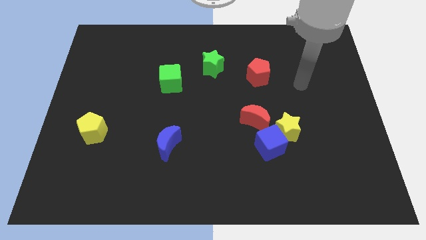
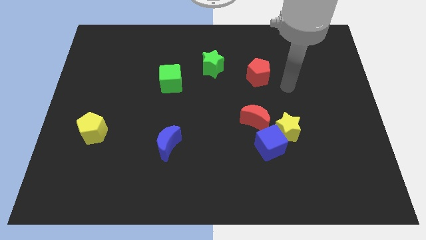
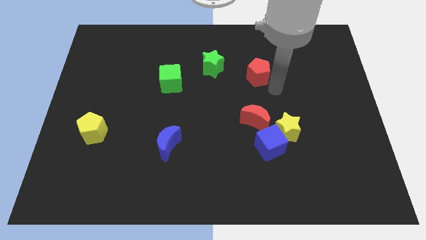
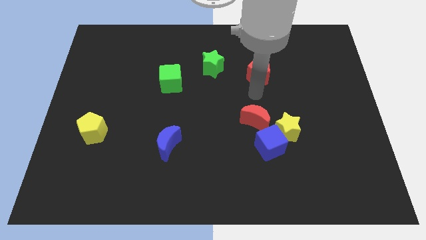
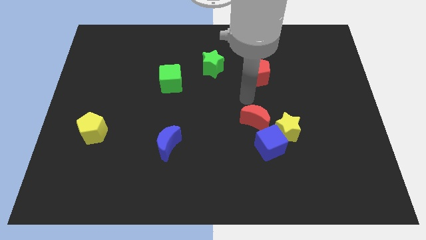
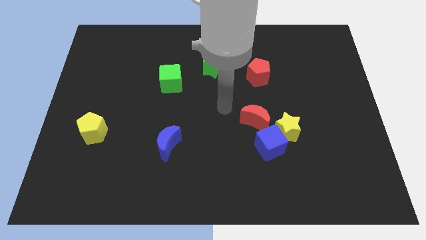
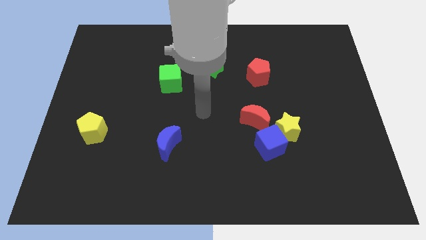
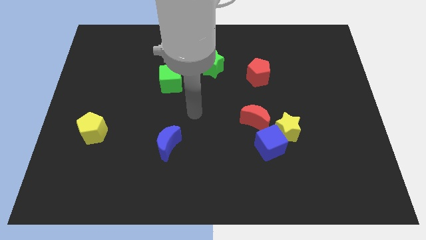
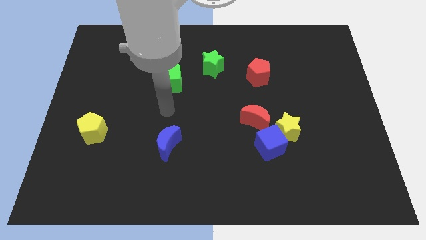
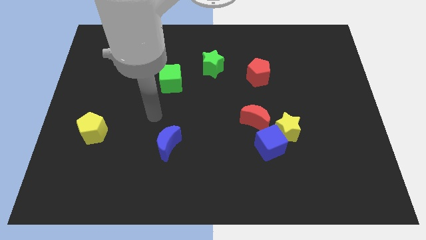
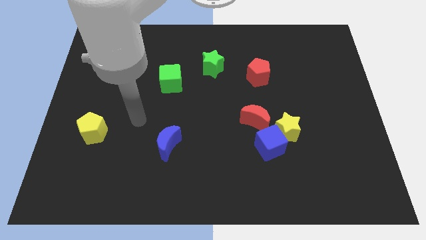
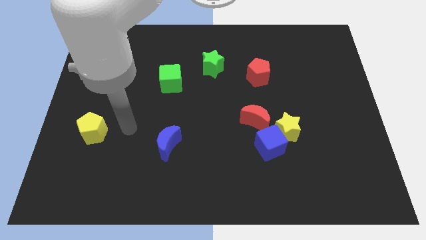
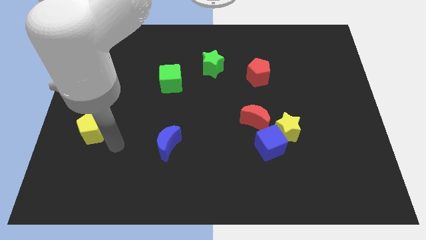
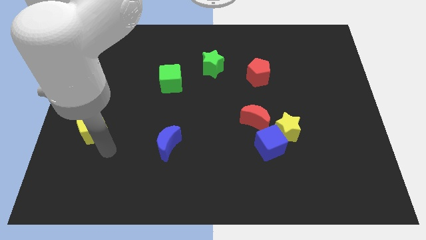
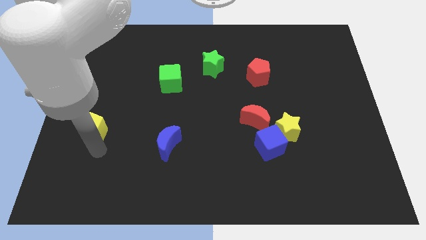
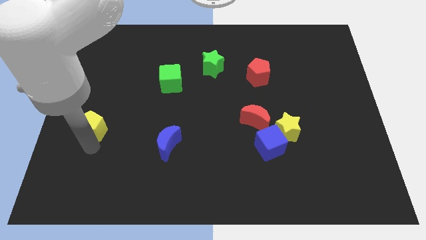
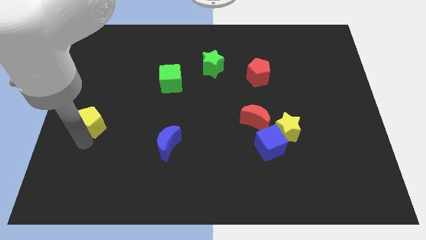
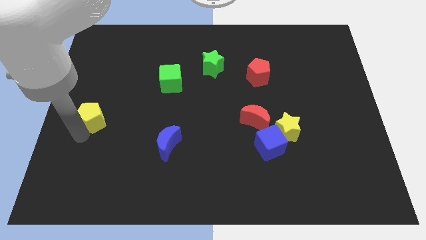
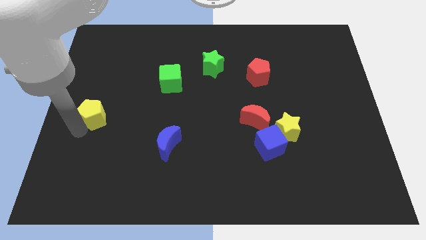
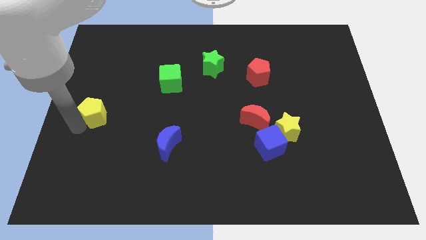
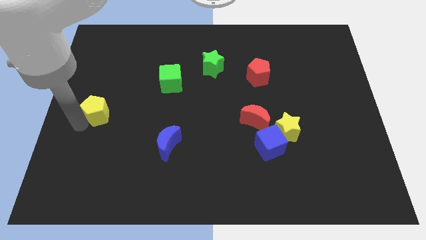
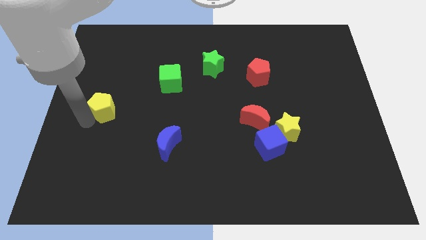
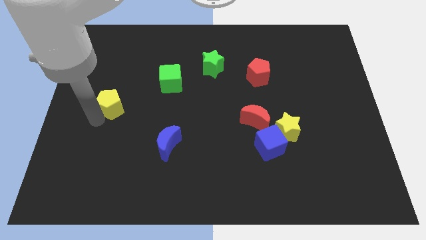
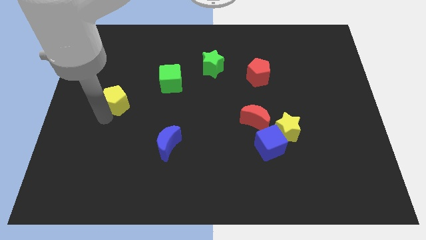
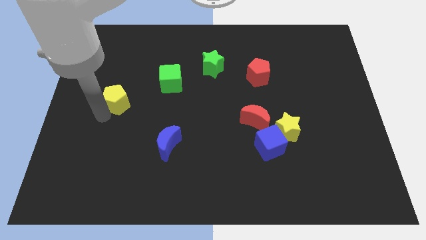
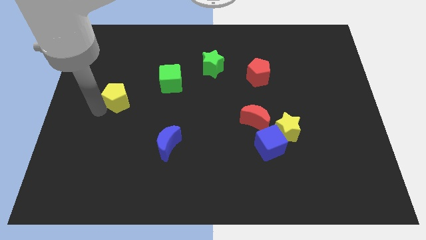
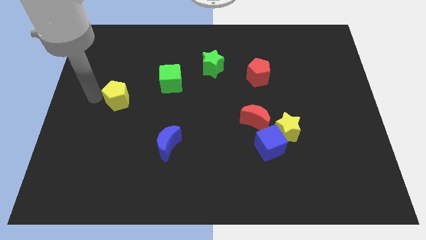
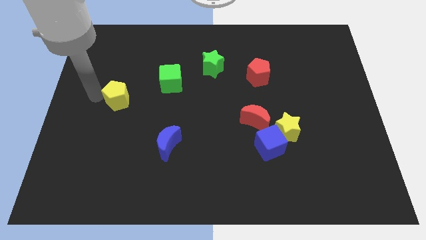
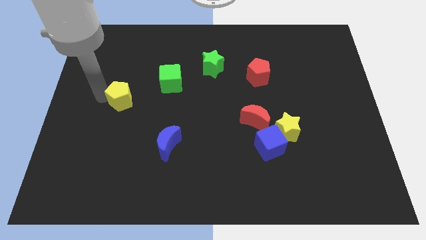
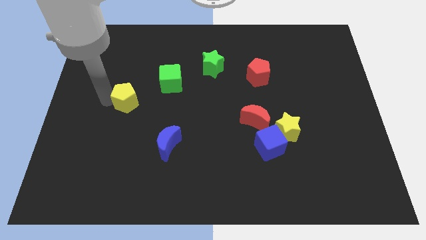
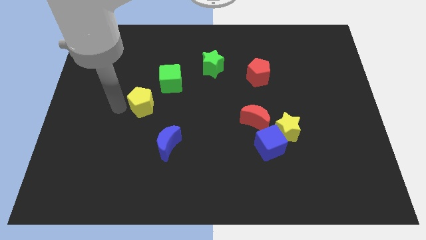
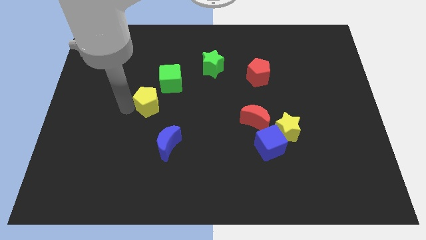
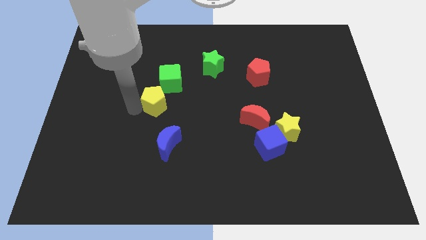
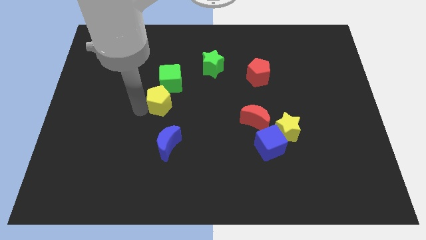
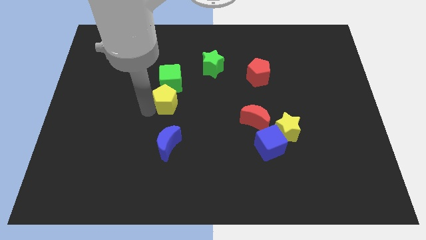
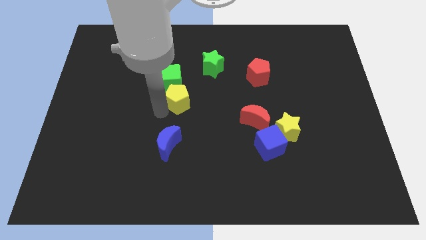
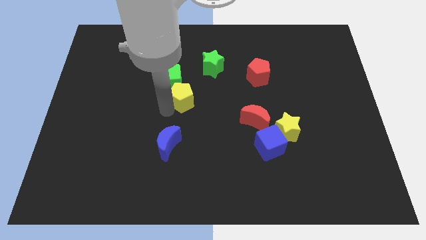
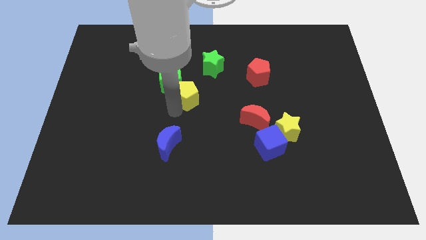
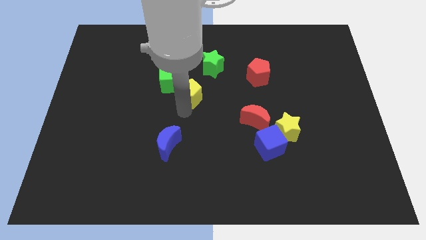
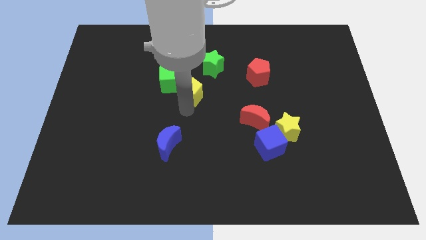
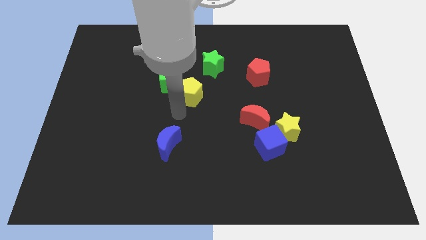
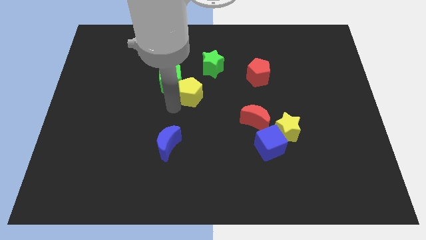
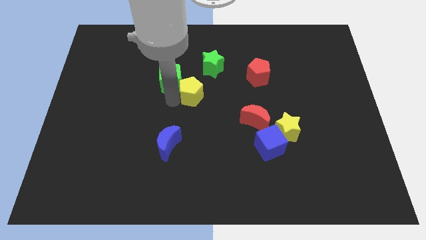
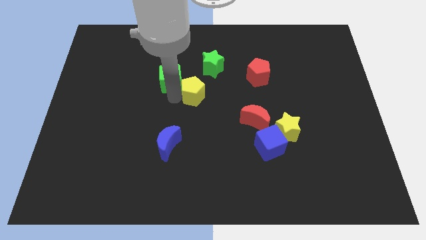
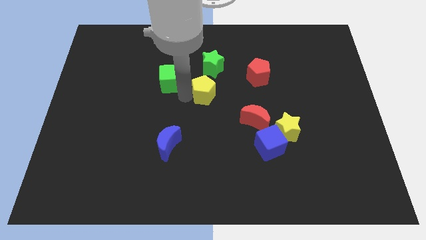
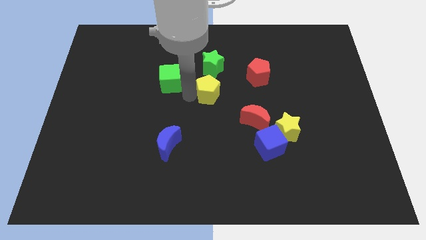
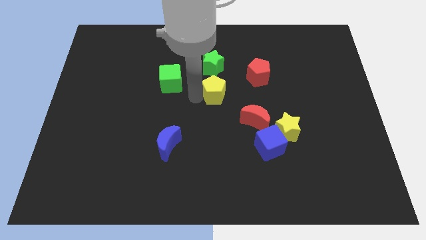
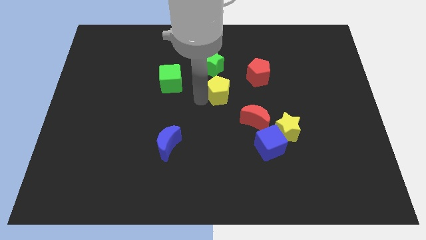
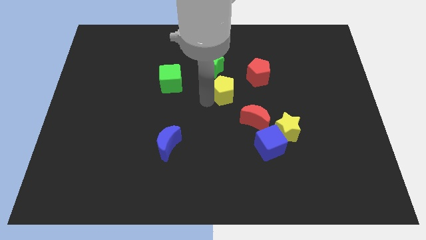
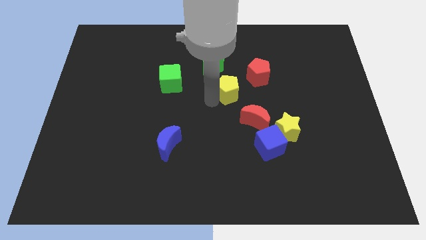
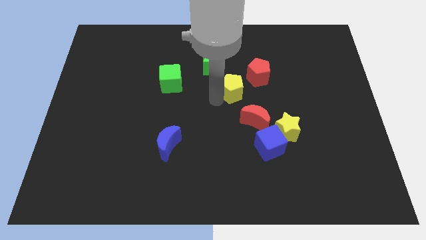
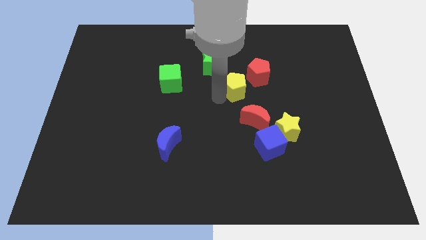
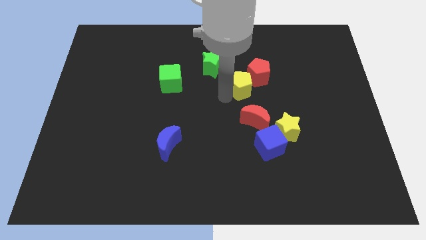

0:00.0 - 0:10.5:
move the yellow pentagon close to the red pentagon

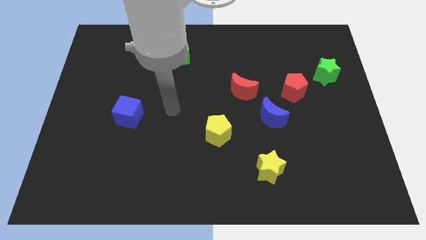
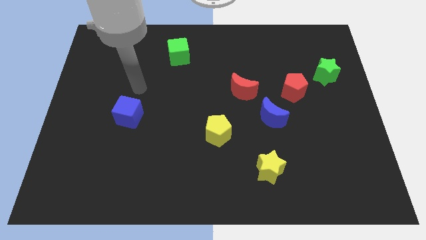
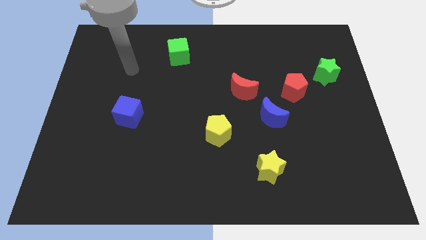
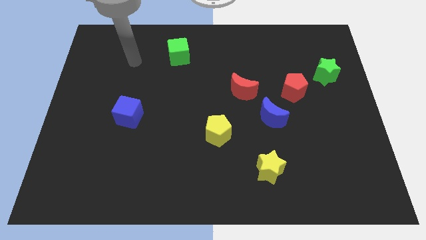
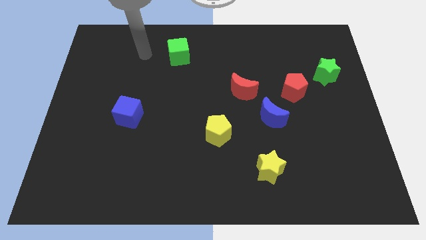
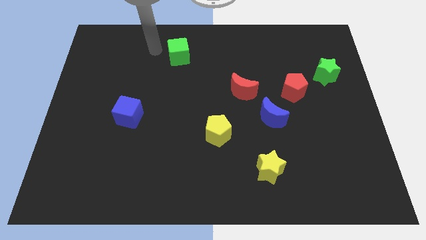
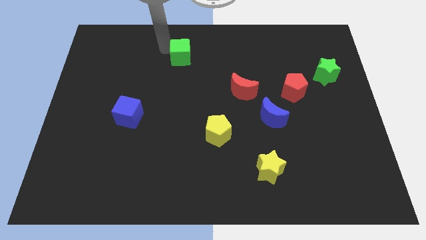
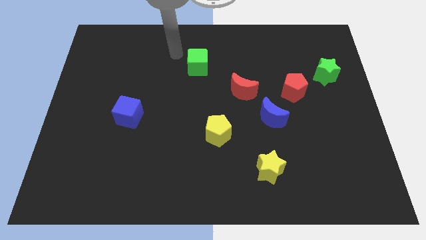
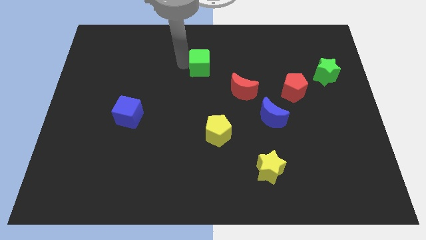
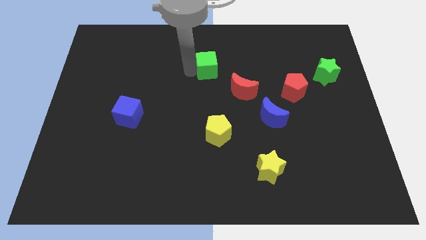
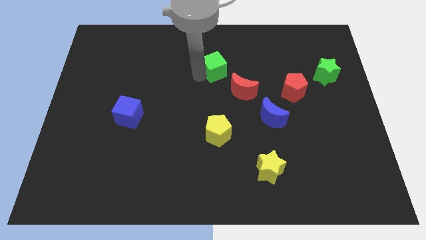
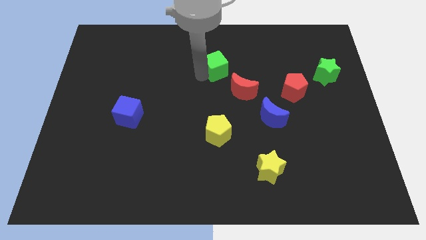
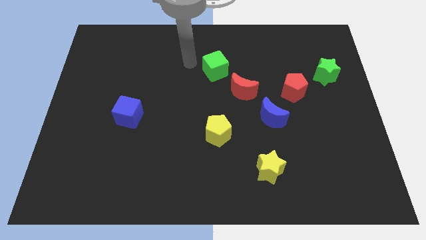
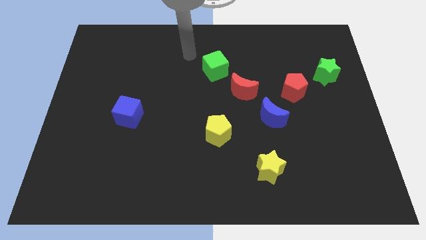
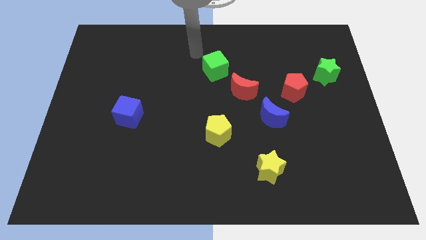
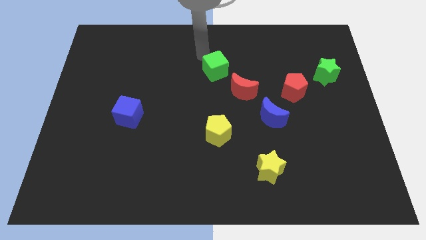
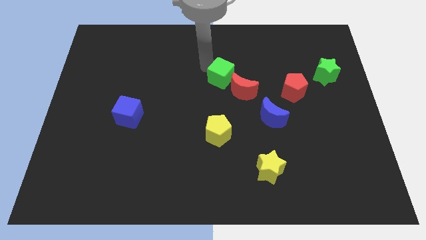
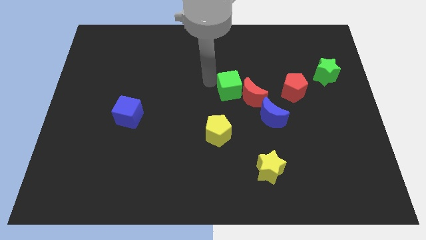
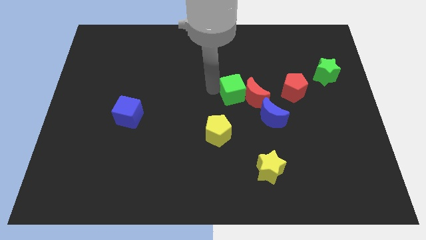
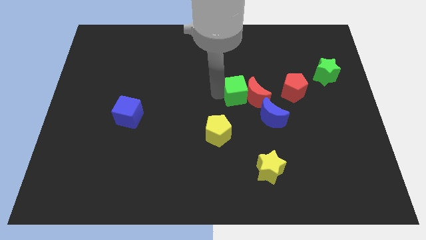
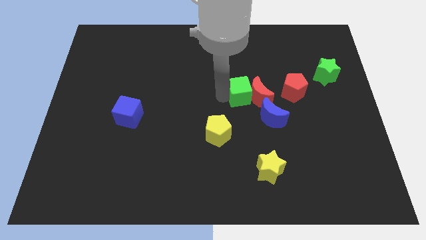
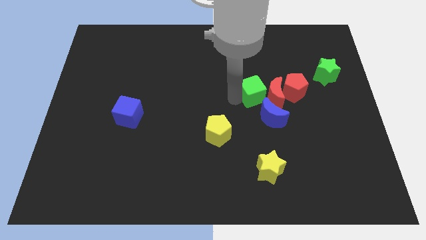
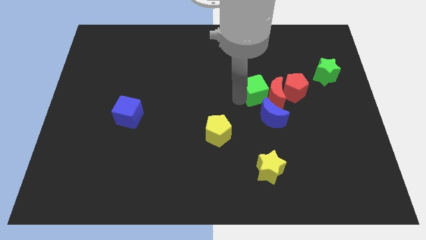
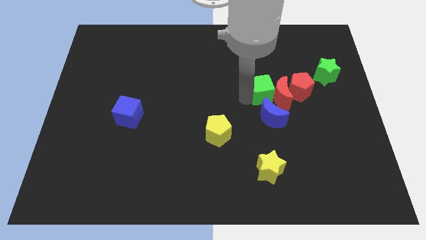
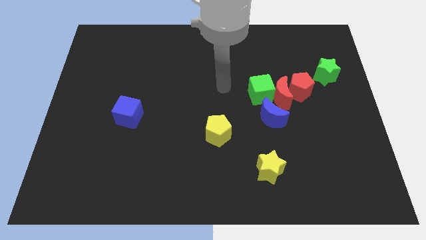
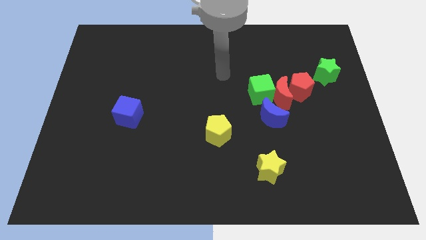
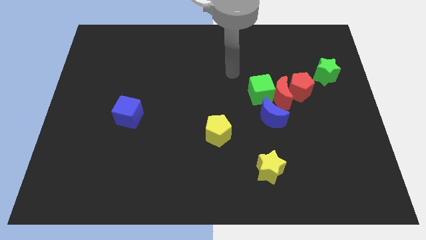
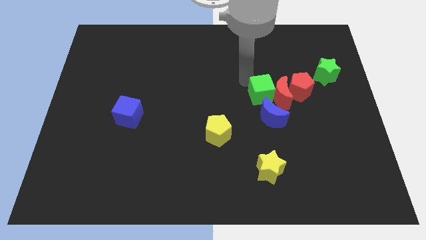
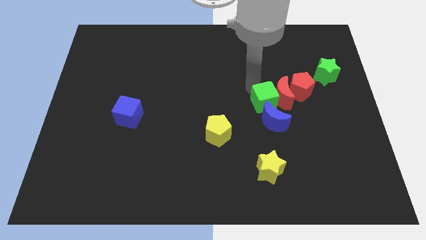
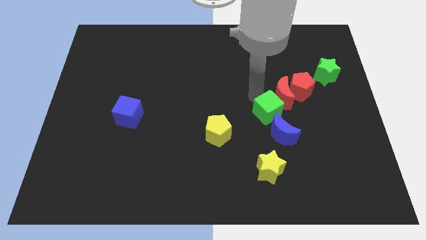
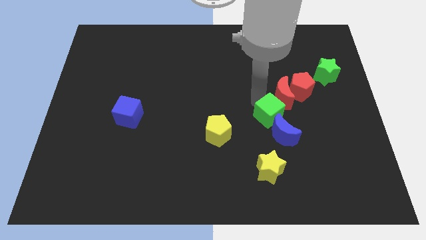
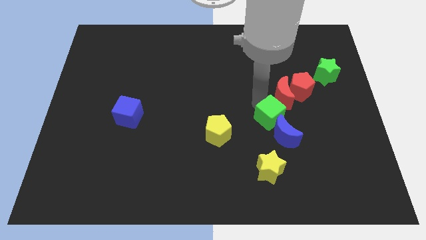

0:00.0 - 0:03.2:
slide the green cube towards the blue moon

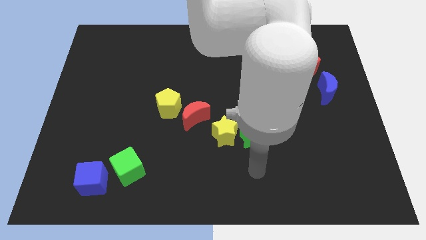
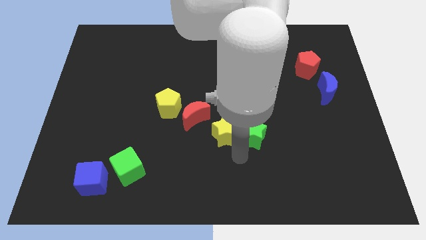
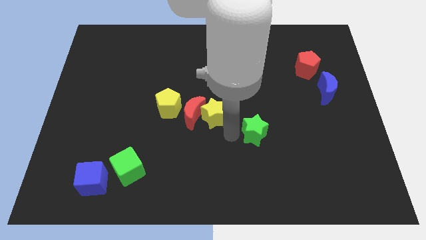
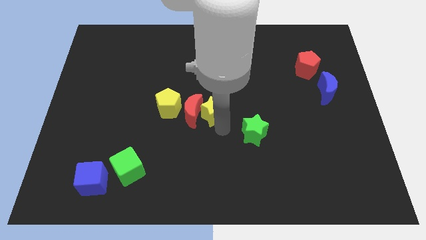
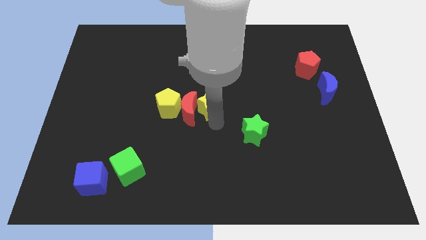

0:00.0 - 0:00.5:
push the yellow star to the red moon
